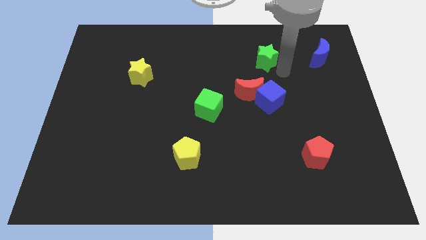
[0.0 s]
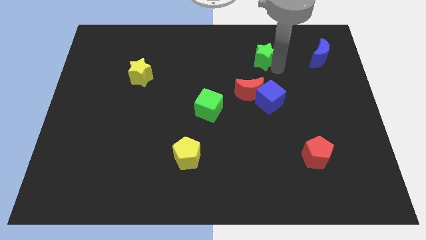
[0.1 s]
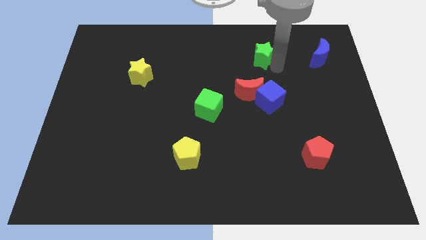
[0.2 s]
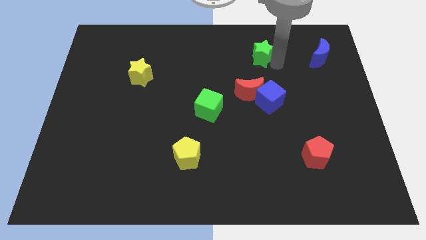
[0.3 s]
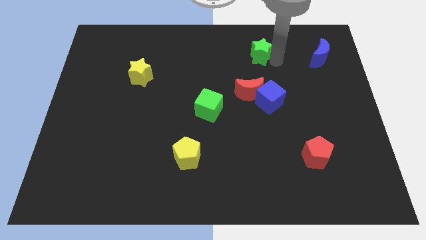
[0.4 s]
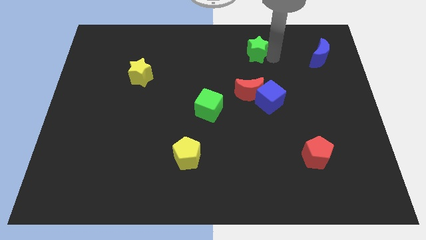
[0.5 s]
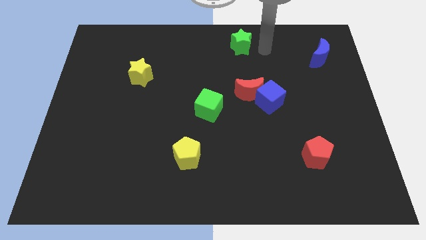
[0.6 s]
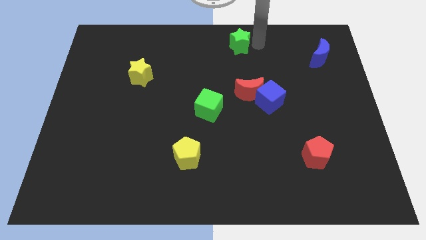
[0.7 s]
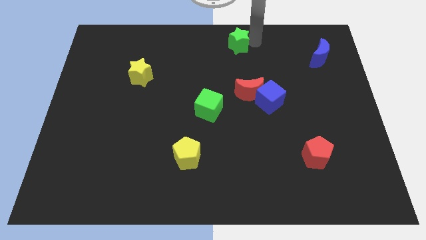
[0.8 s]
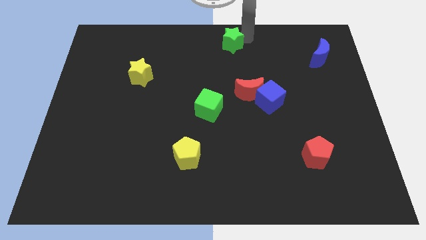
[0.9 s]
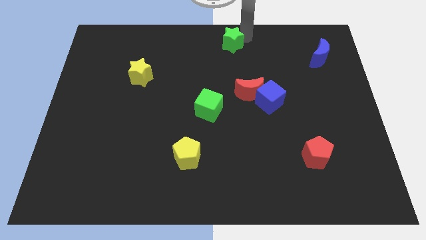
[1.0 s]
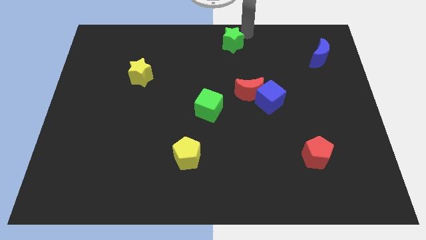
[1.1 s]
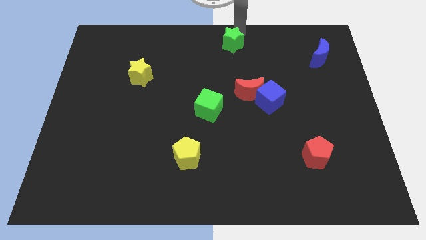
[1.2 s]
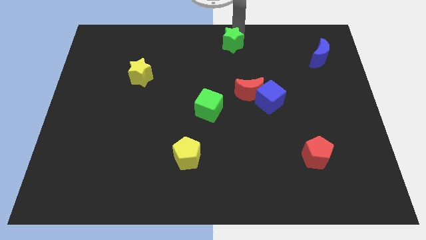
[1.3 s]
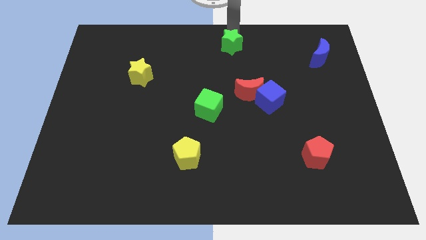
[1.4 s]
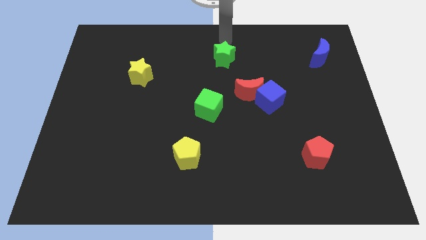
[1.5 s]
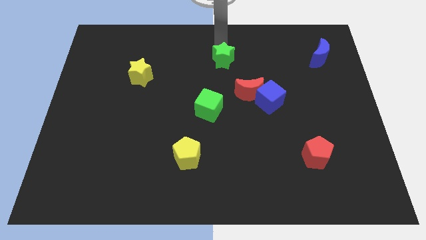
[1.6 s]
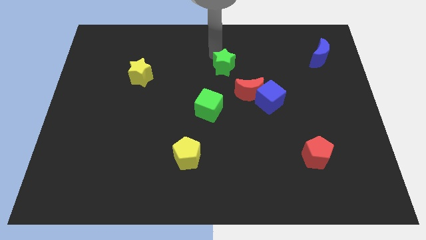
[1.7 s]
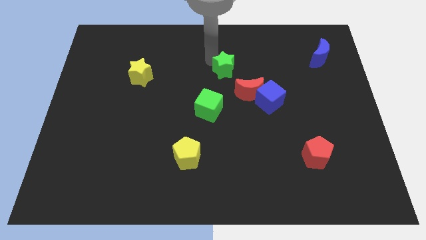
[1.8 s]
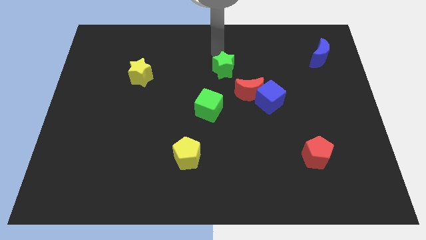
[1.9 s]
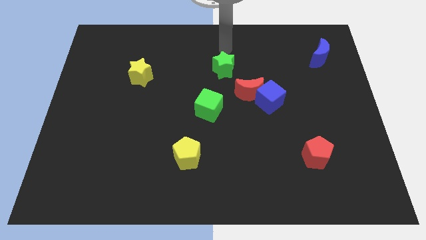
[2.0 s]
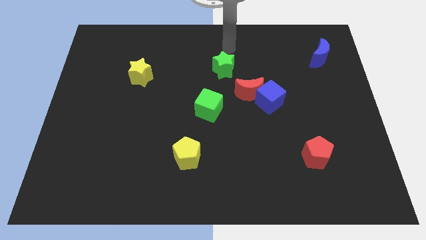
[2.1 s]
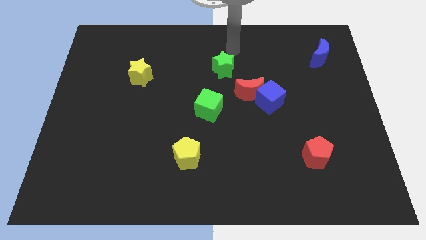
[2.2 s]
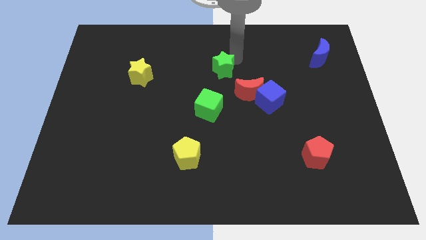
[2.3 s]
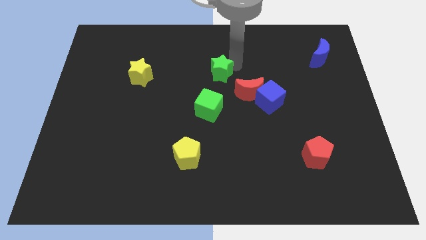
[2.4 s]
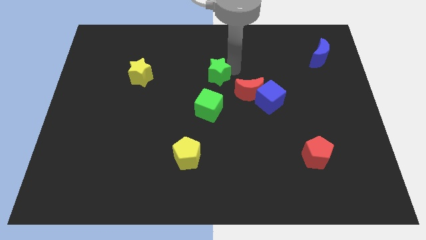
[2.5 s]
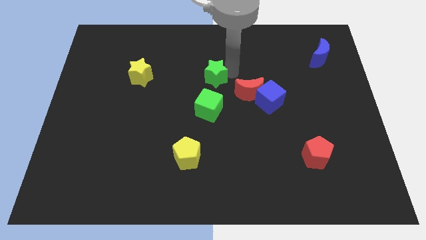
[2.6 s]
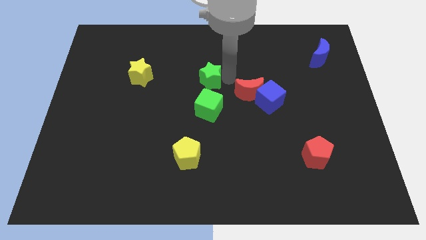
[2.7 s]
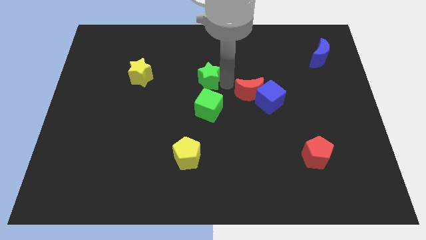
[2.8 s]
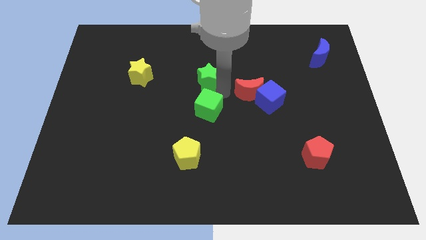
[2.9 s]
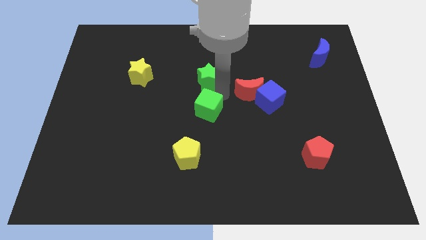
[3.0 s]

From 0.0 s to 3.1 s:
bring the green star at the top side of the green cube

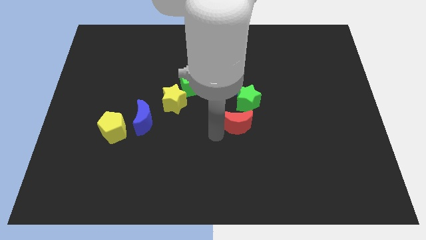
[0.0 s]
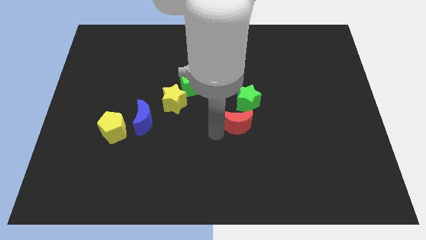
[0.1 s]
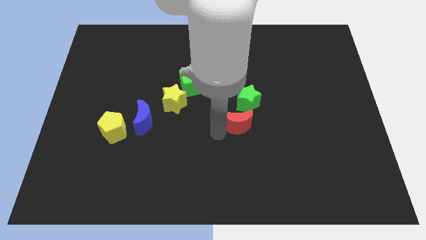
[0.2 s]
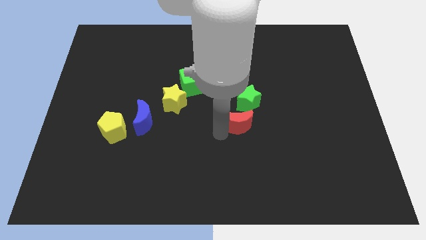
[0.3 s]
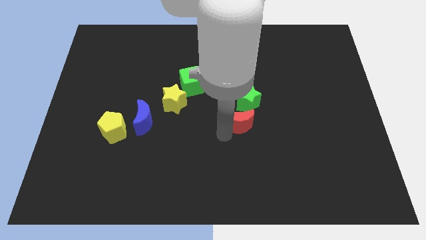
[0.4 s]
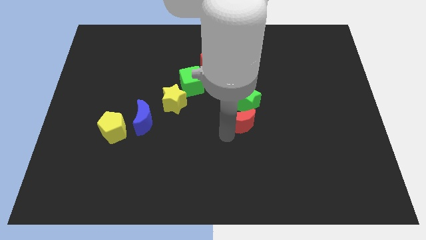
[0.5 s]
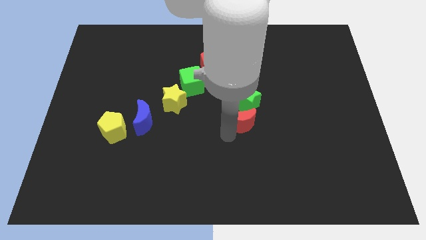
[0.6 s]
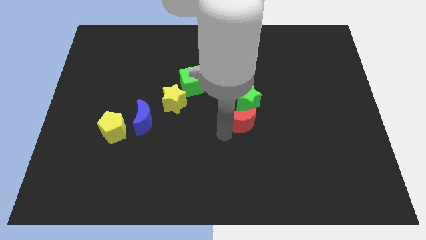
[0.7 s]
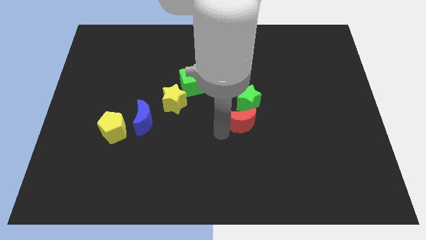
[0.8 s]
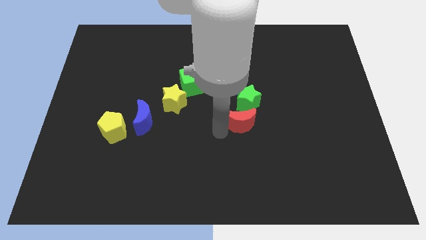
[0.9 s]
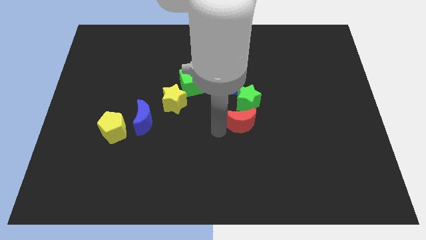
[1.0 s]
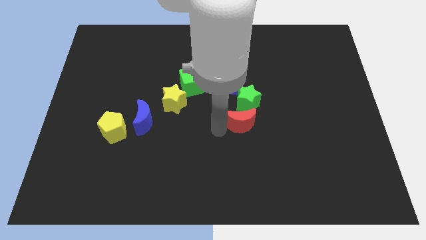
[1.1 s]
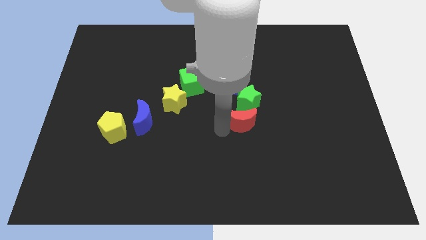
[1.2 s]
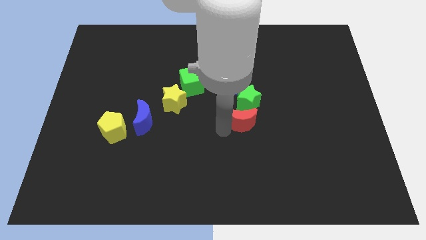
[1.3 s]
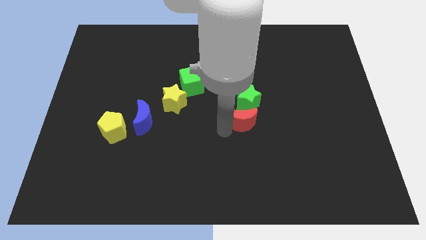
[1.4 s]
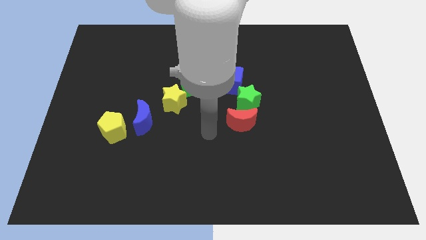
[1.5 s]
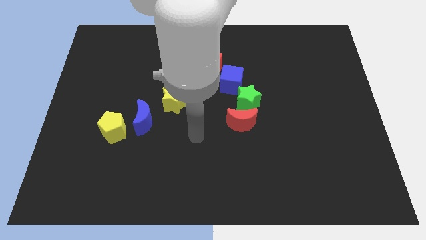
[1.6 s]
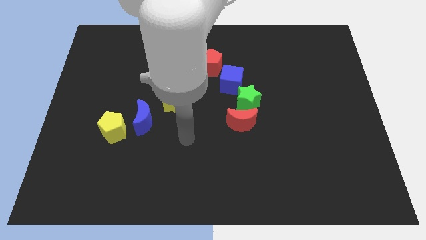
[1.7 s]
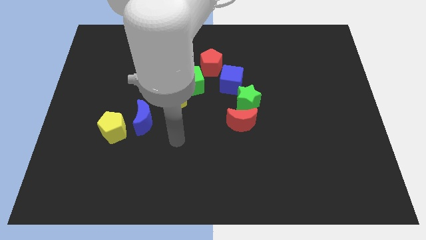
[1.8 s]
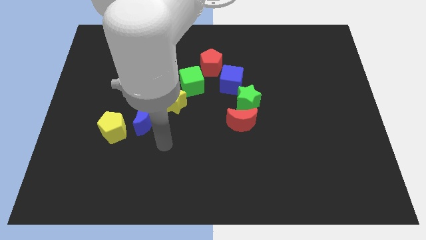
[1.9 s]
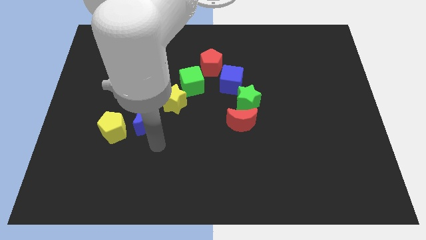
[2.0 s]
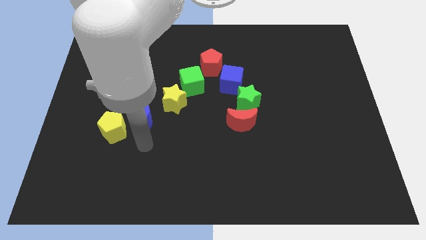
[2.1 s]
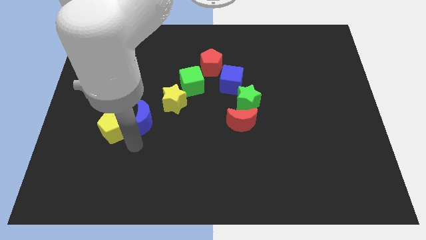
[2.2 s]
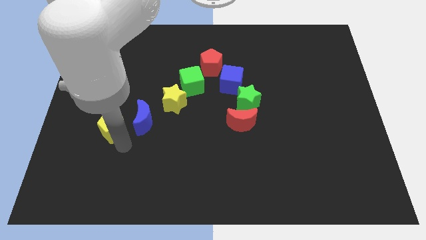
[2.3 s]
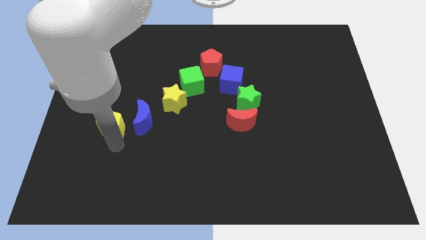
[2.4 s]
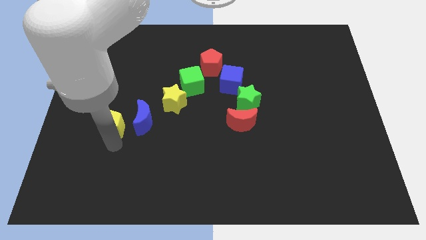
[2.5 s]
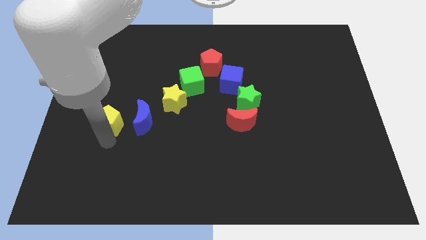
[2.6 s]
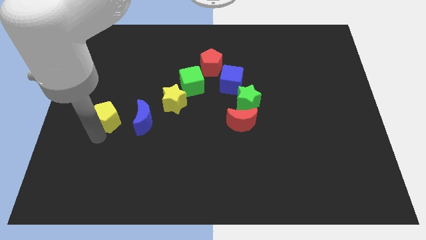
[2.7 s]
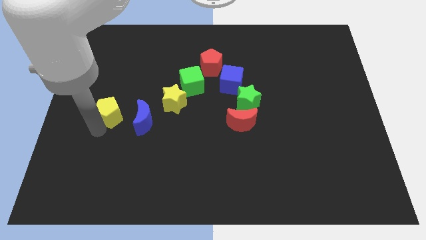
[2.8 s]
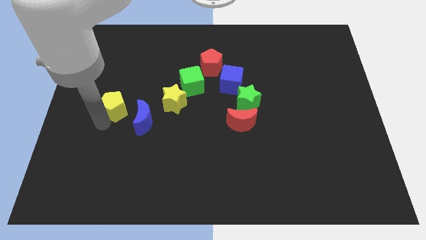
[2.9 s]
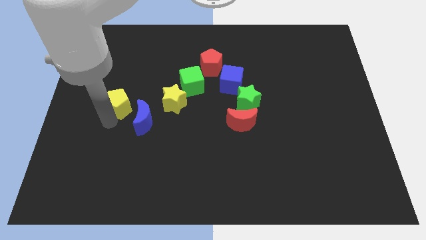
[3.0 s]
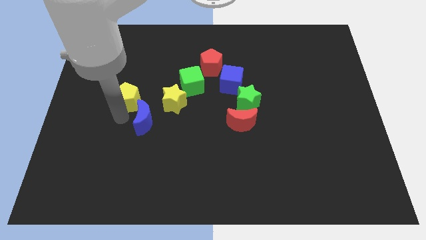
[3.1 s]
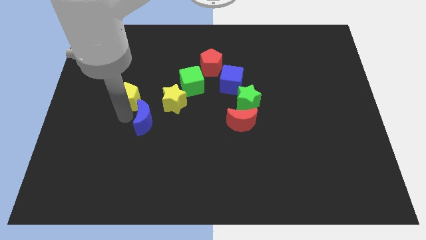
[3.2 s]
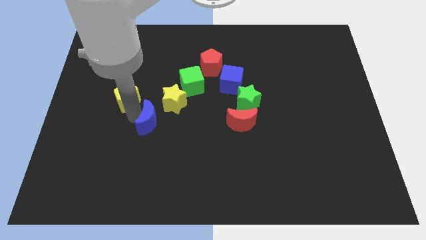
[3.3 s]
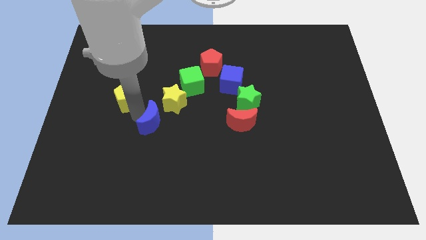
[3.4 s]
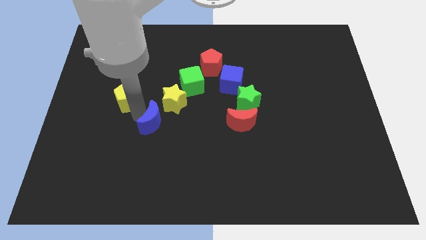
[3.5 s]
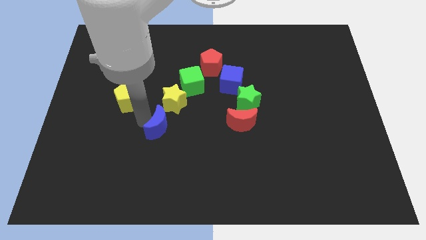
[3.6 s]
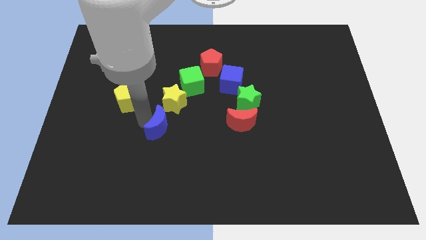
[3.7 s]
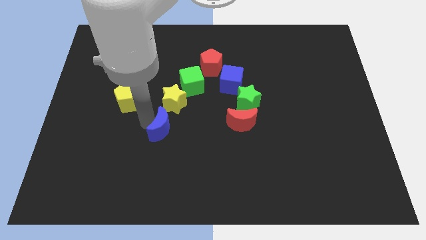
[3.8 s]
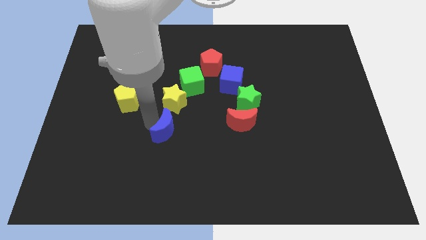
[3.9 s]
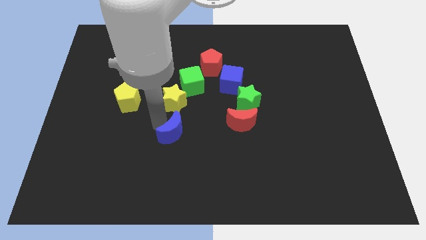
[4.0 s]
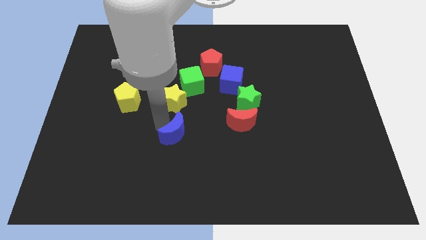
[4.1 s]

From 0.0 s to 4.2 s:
drag the blue moon to the right

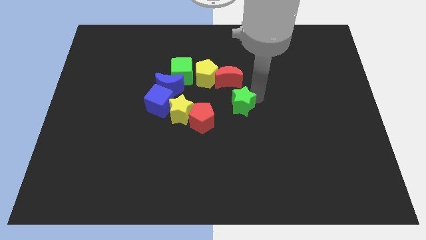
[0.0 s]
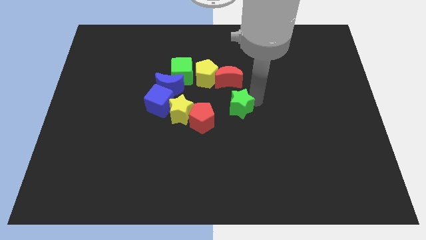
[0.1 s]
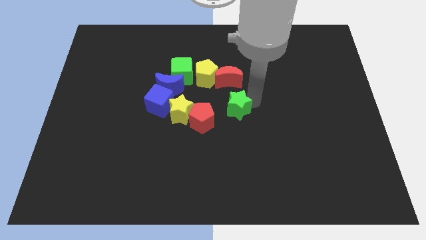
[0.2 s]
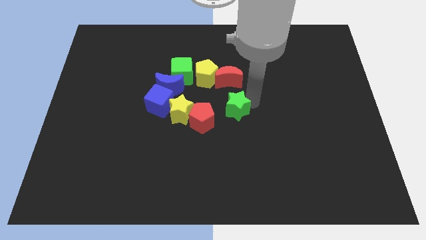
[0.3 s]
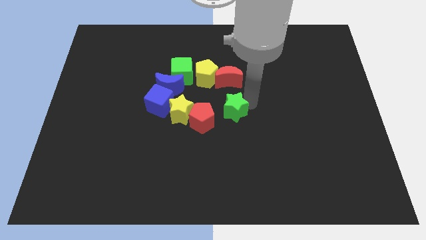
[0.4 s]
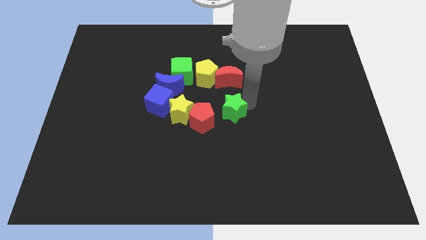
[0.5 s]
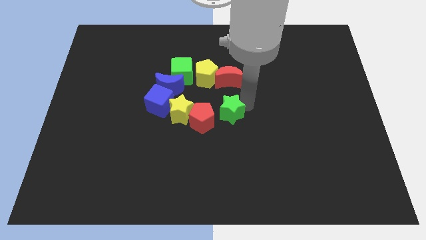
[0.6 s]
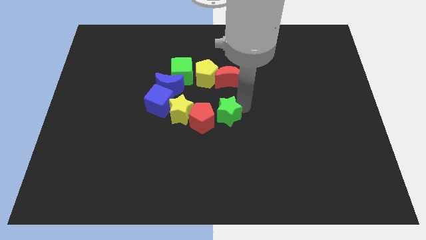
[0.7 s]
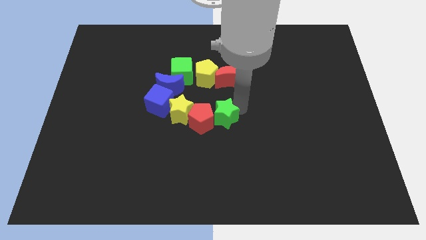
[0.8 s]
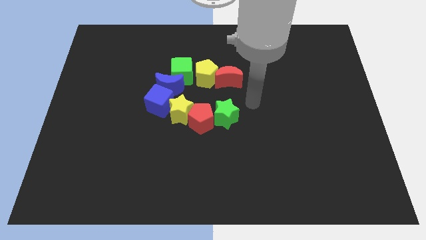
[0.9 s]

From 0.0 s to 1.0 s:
push the green star to the right side of the red pentagon

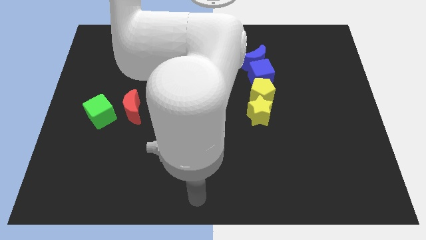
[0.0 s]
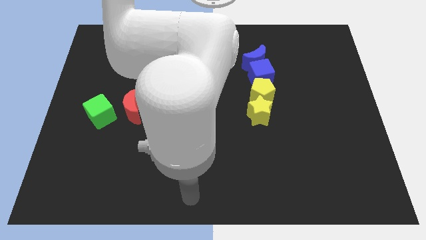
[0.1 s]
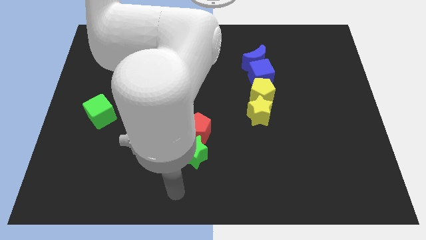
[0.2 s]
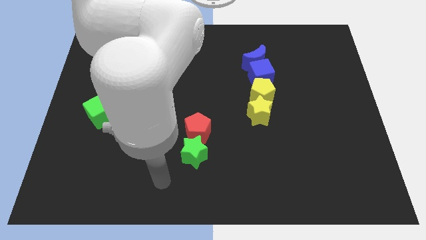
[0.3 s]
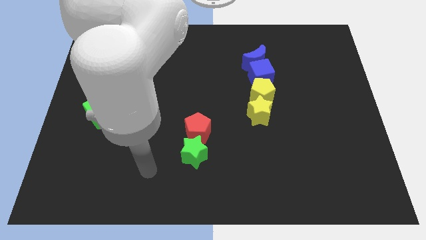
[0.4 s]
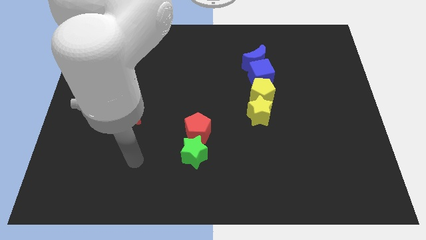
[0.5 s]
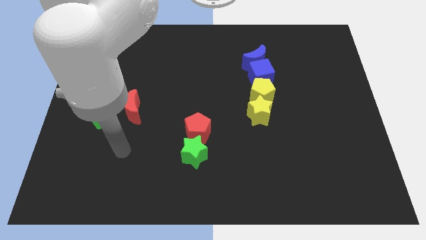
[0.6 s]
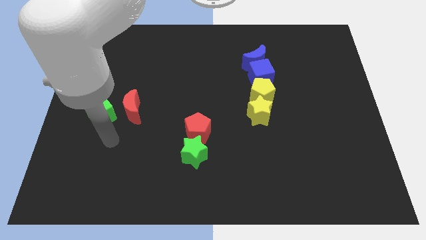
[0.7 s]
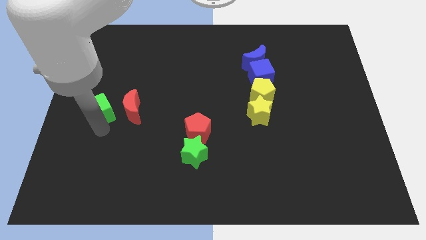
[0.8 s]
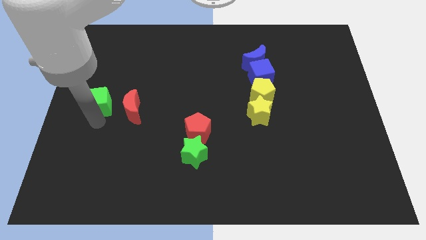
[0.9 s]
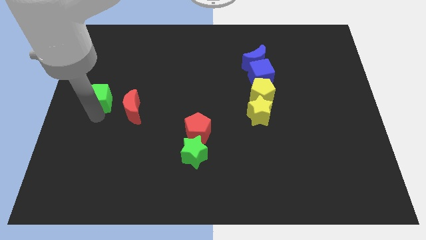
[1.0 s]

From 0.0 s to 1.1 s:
move the green cube slightly to the top
